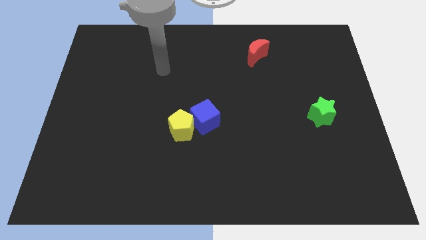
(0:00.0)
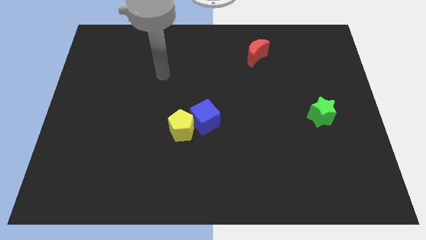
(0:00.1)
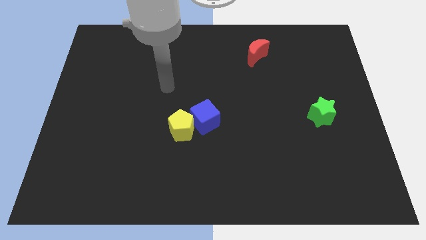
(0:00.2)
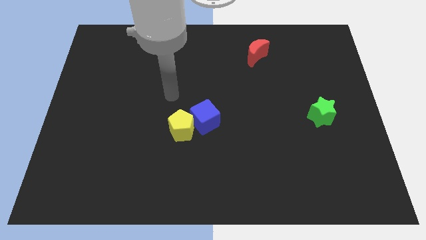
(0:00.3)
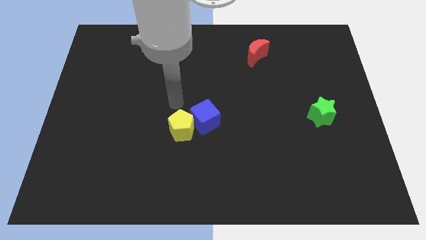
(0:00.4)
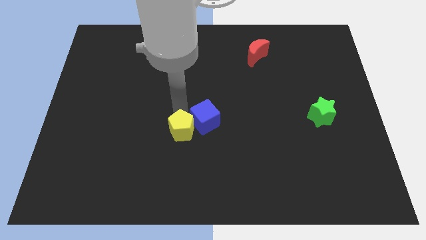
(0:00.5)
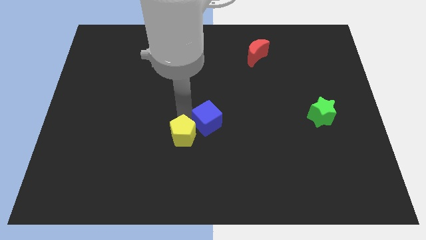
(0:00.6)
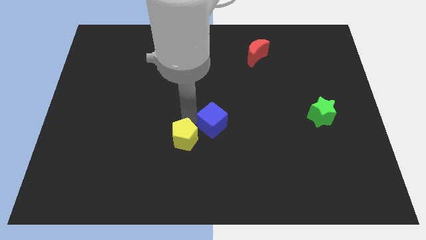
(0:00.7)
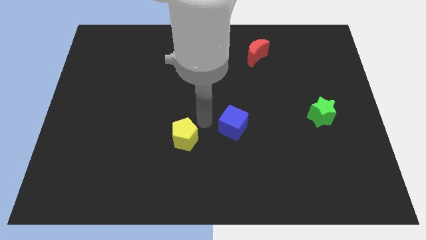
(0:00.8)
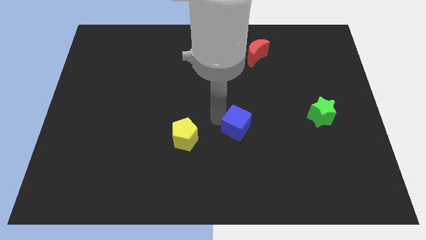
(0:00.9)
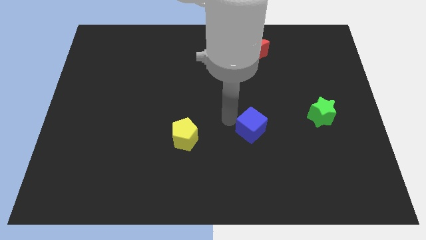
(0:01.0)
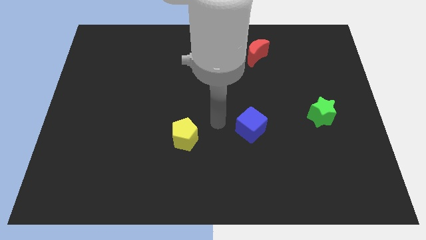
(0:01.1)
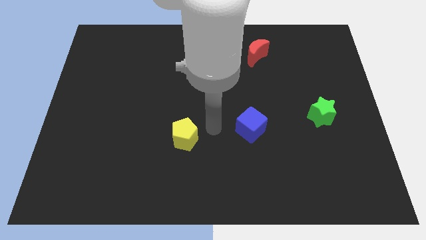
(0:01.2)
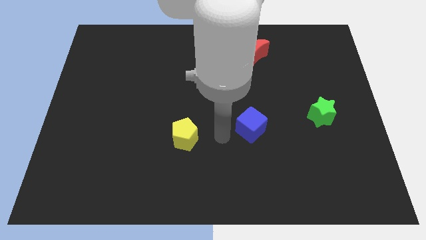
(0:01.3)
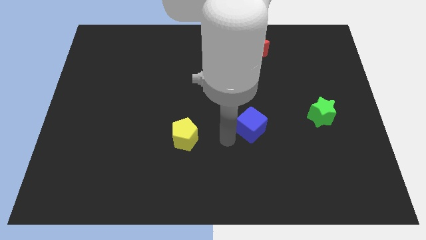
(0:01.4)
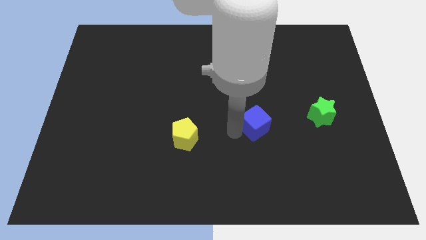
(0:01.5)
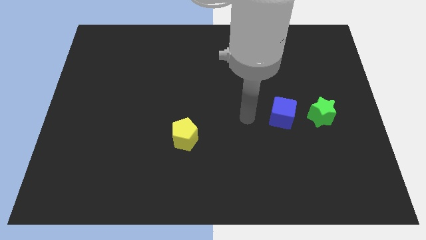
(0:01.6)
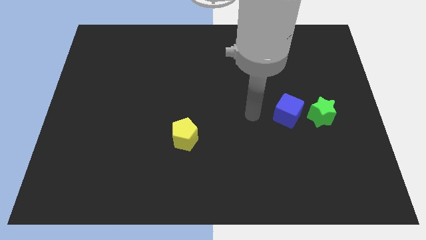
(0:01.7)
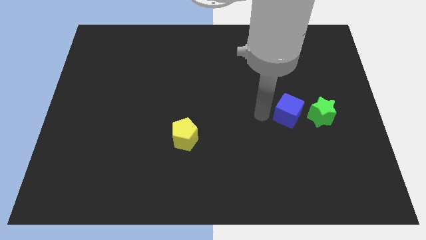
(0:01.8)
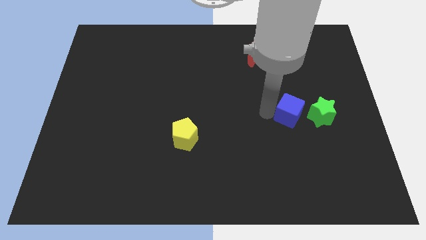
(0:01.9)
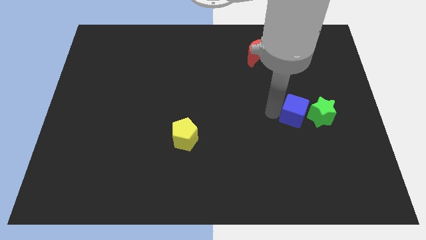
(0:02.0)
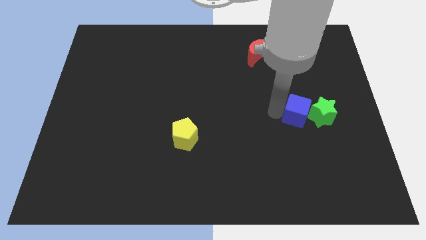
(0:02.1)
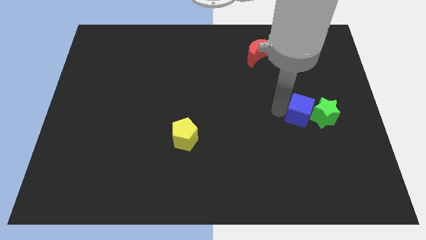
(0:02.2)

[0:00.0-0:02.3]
slide the cube close to the green block

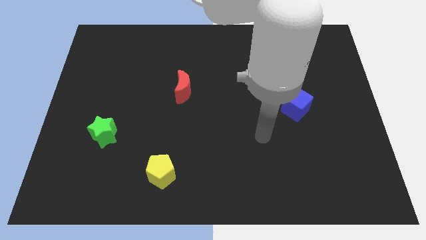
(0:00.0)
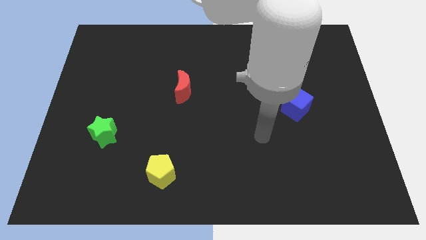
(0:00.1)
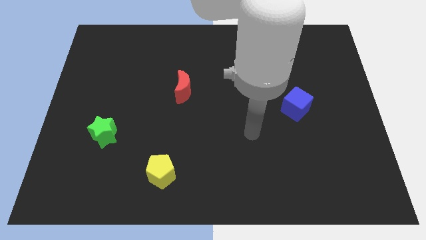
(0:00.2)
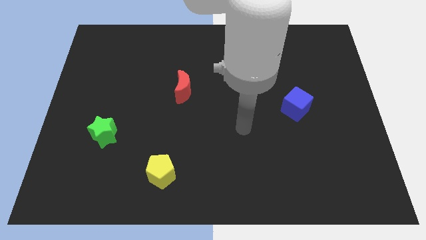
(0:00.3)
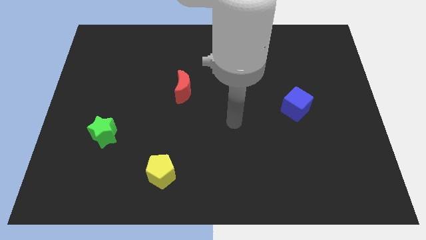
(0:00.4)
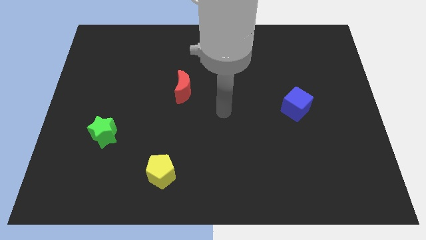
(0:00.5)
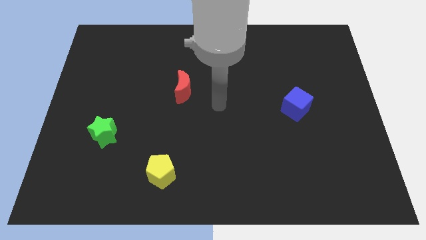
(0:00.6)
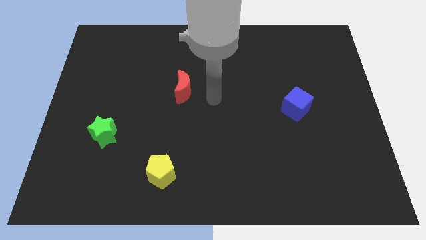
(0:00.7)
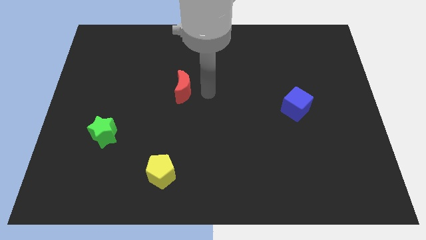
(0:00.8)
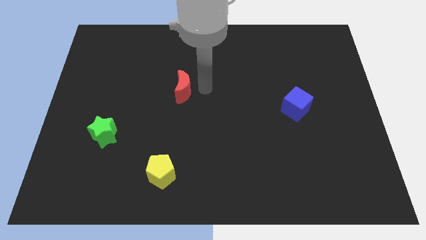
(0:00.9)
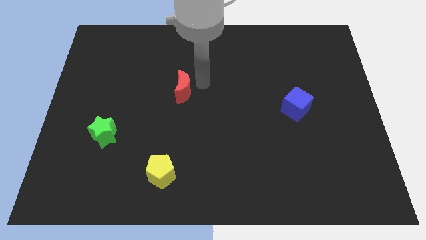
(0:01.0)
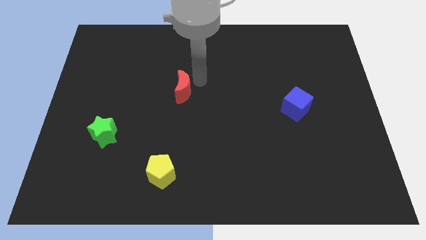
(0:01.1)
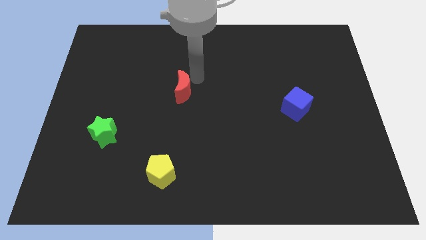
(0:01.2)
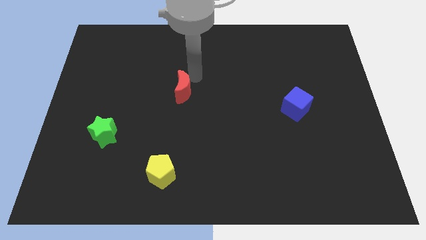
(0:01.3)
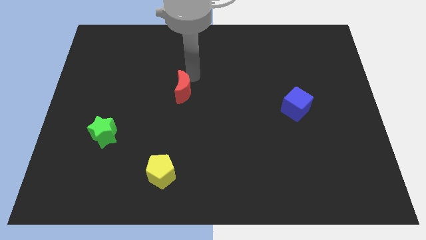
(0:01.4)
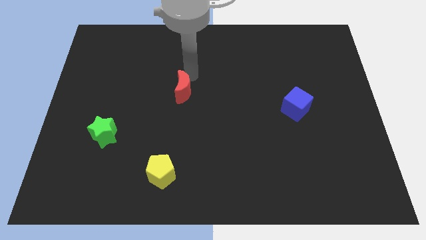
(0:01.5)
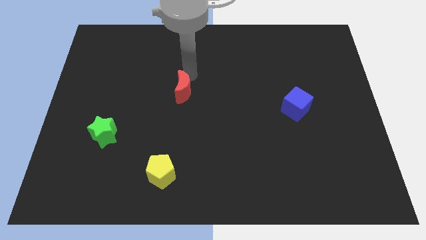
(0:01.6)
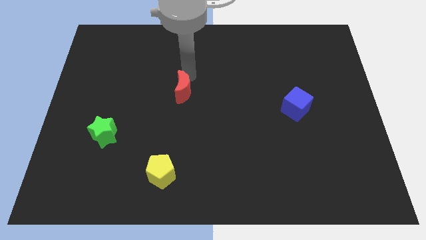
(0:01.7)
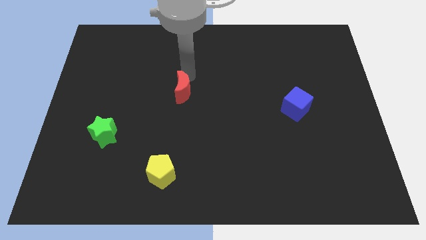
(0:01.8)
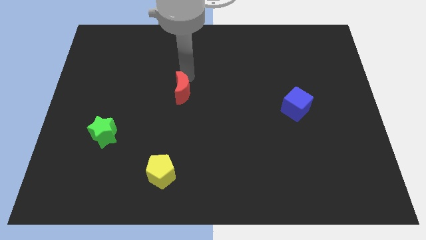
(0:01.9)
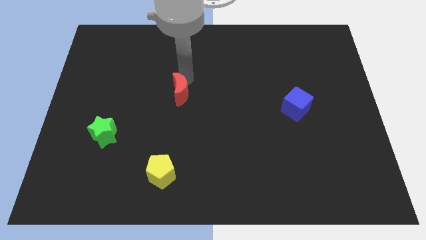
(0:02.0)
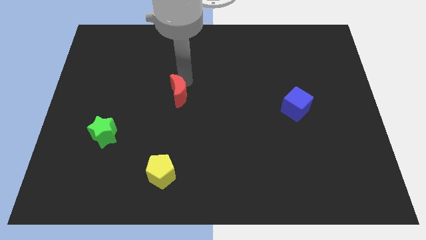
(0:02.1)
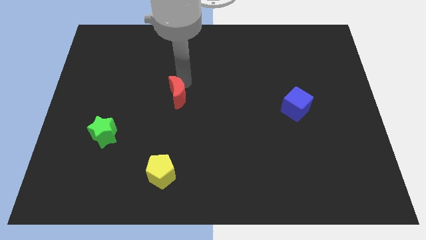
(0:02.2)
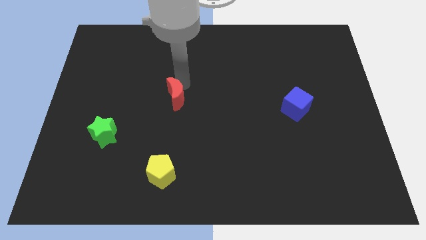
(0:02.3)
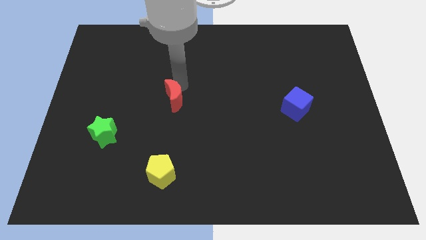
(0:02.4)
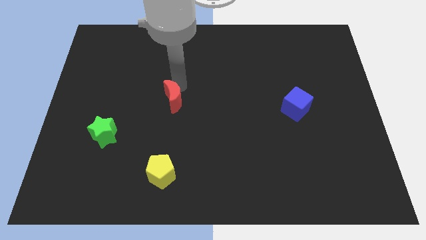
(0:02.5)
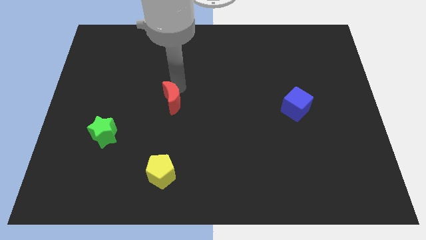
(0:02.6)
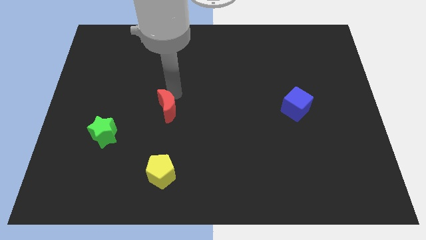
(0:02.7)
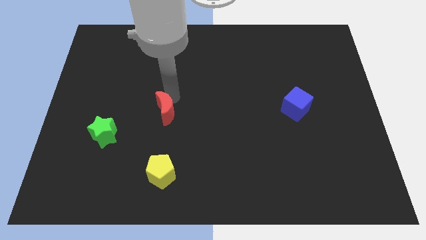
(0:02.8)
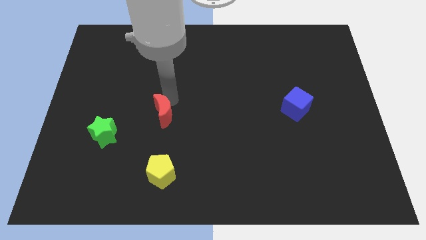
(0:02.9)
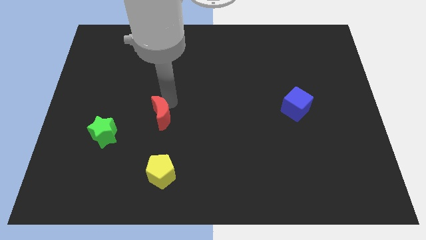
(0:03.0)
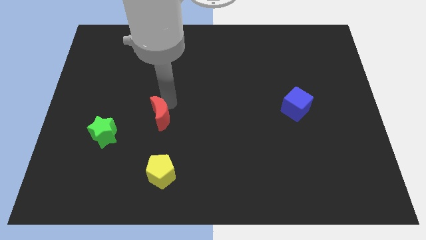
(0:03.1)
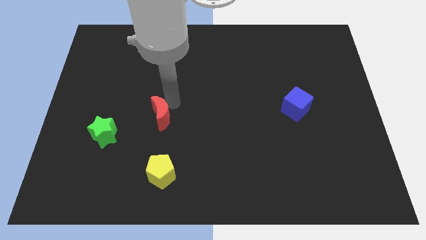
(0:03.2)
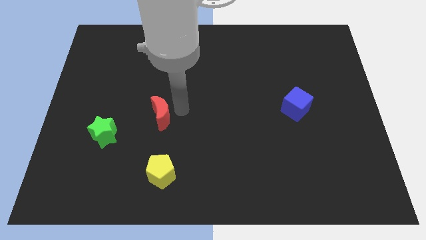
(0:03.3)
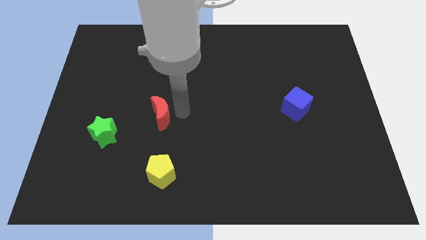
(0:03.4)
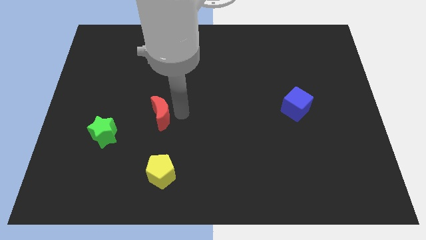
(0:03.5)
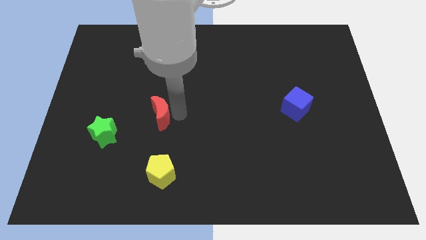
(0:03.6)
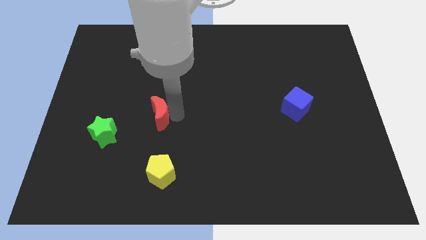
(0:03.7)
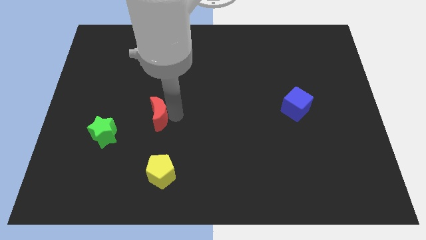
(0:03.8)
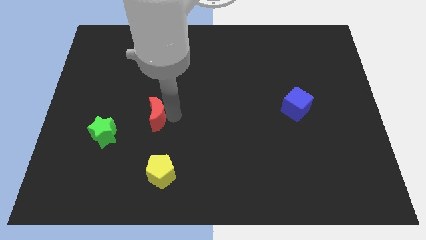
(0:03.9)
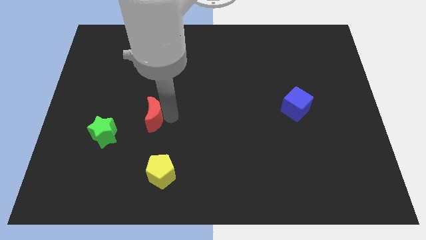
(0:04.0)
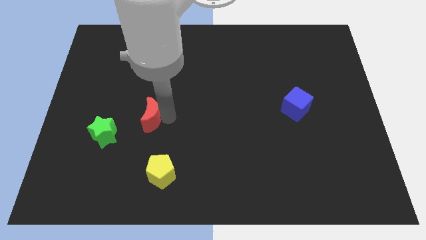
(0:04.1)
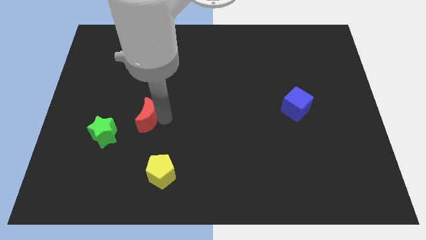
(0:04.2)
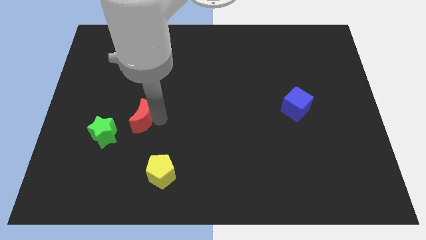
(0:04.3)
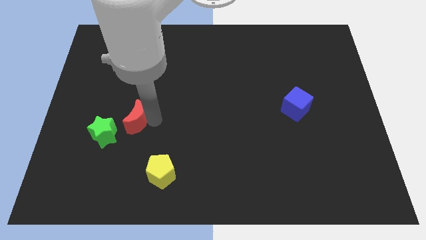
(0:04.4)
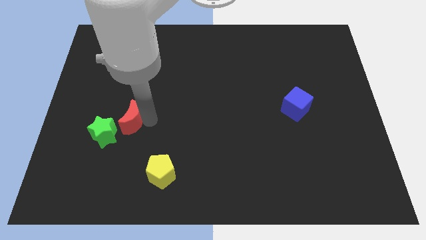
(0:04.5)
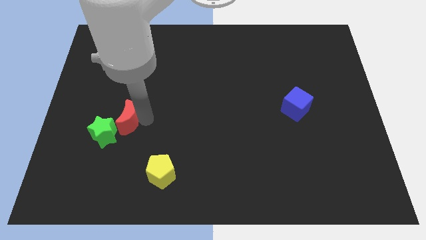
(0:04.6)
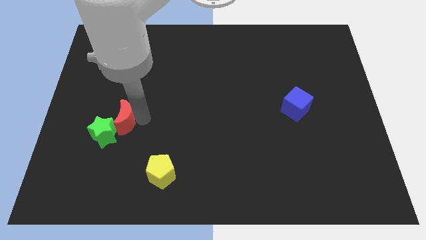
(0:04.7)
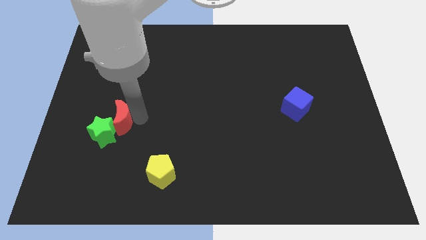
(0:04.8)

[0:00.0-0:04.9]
move the red block to the star

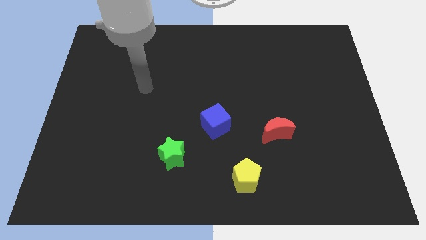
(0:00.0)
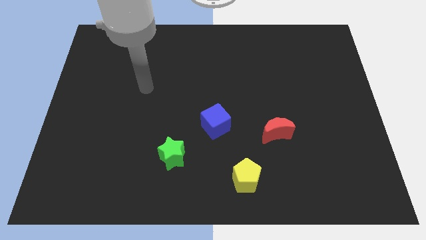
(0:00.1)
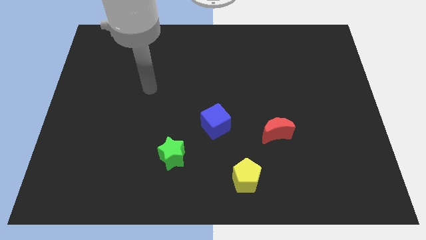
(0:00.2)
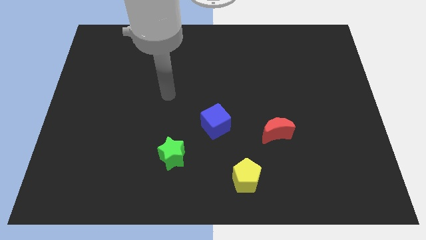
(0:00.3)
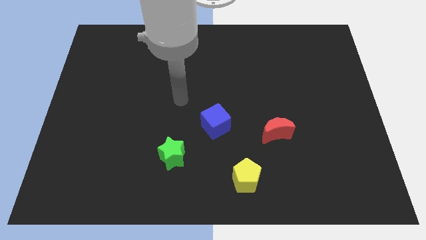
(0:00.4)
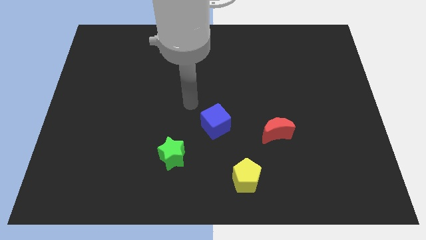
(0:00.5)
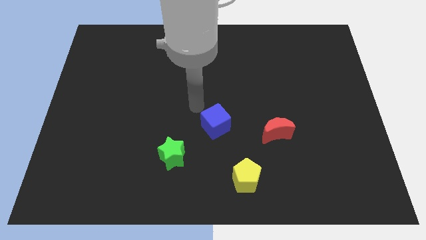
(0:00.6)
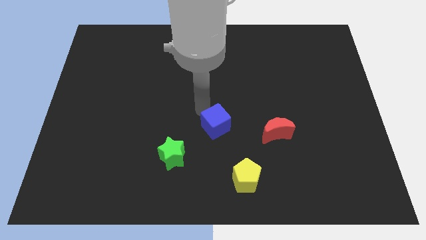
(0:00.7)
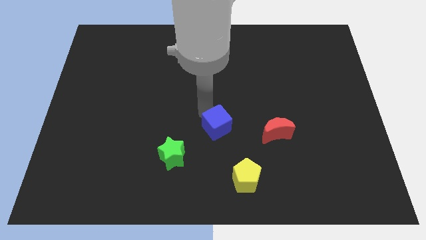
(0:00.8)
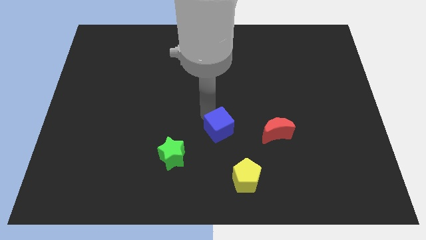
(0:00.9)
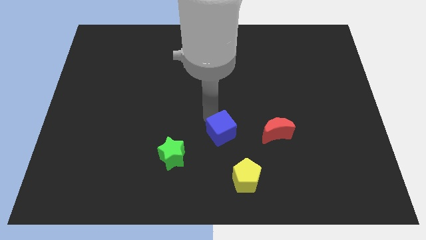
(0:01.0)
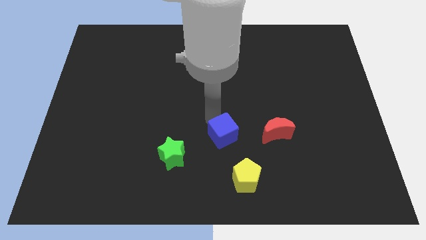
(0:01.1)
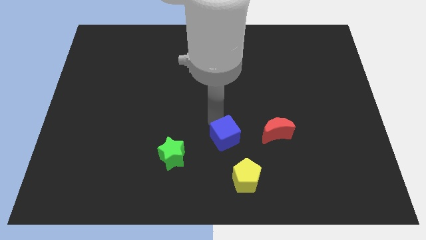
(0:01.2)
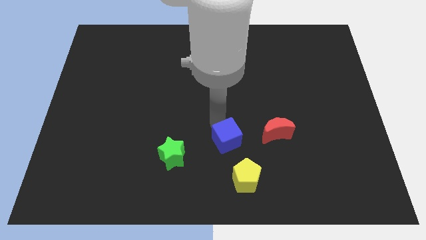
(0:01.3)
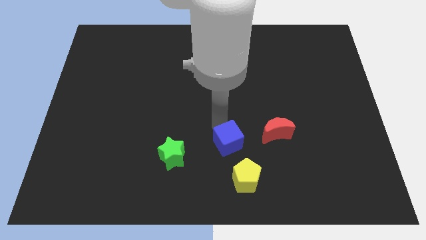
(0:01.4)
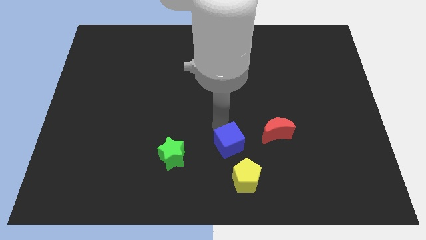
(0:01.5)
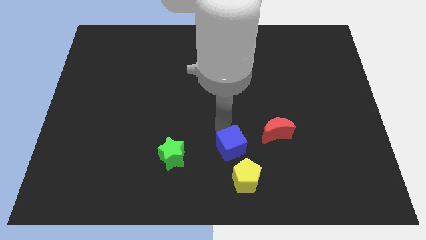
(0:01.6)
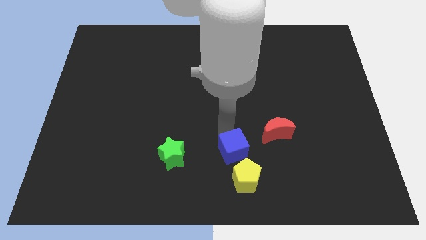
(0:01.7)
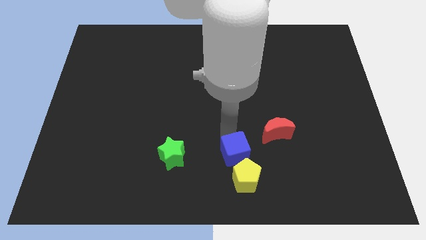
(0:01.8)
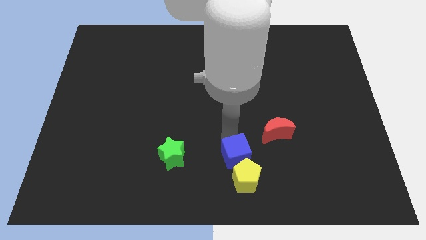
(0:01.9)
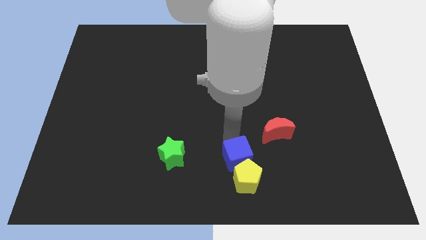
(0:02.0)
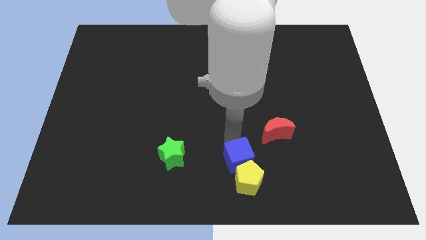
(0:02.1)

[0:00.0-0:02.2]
put the blue cube close to the yellow block
